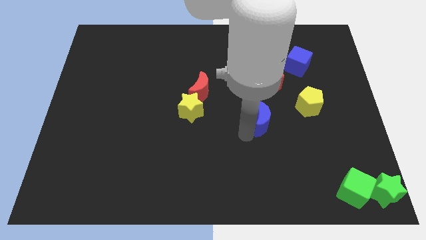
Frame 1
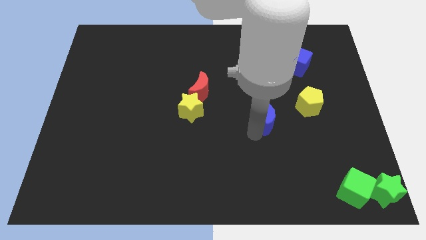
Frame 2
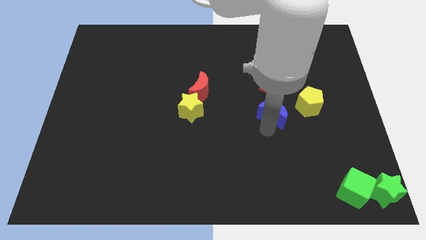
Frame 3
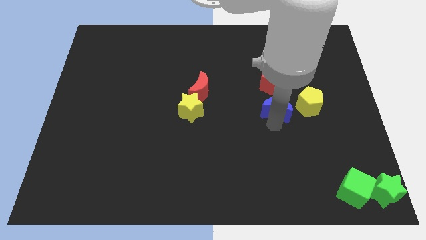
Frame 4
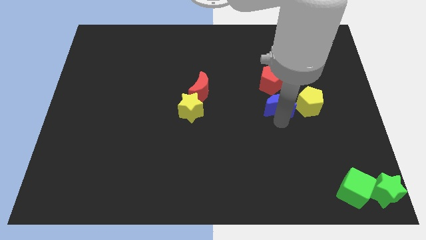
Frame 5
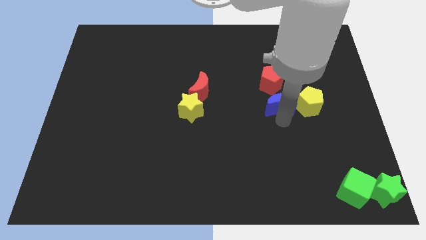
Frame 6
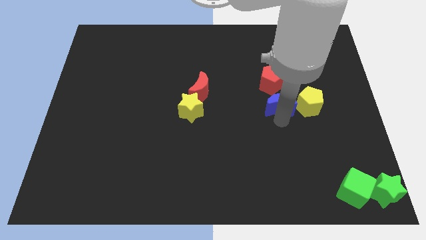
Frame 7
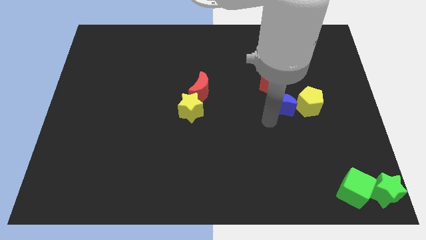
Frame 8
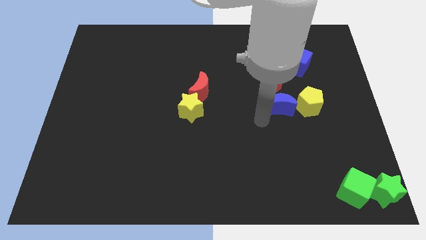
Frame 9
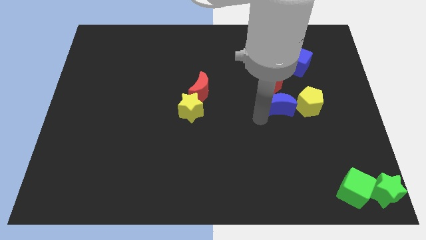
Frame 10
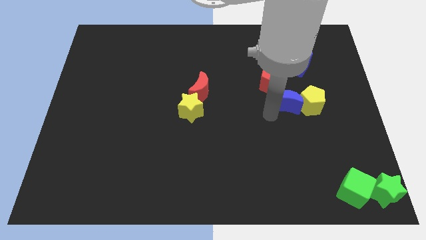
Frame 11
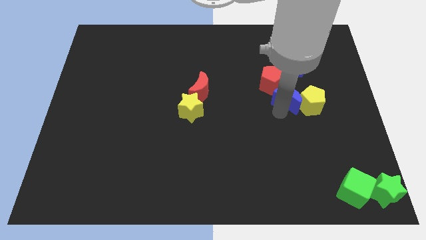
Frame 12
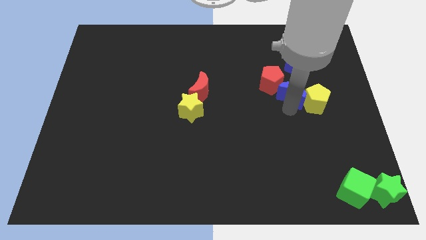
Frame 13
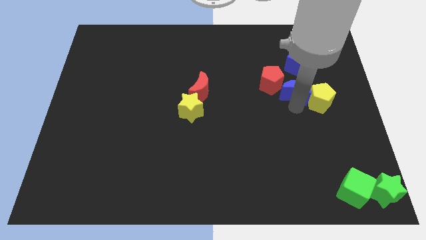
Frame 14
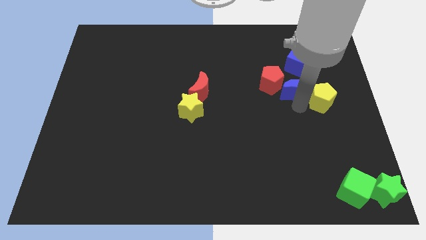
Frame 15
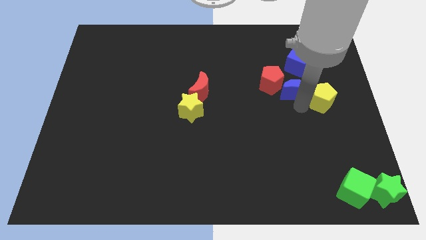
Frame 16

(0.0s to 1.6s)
move the blue crescent to the bottom right of the red pentagon

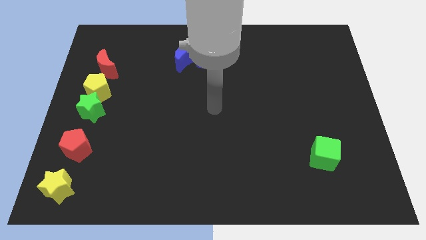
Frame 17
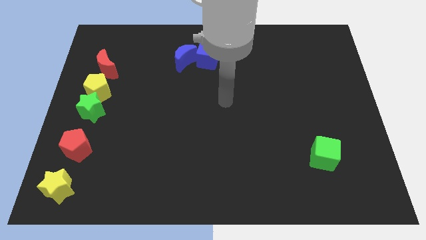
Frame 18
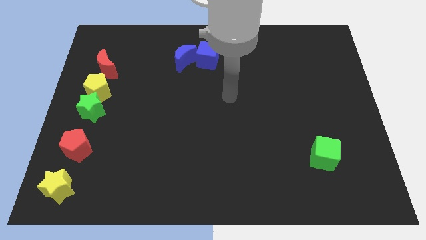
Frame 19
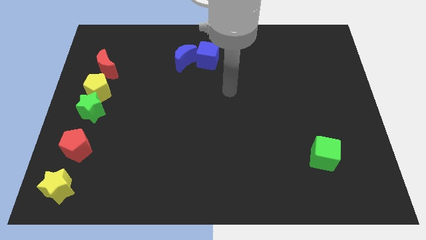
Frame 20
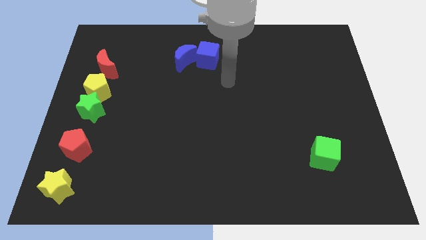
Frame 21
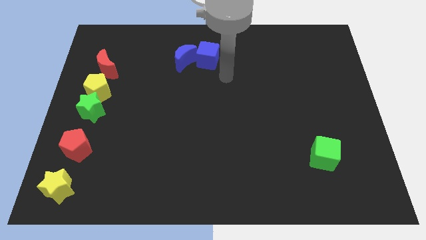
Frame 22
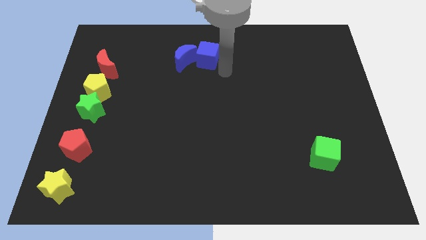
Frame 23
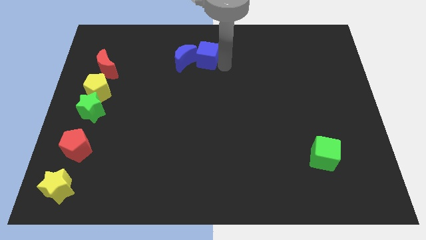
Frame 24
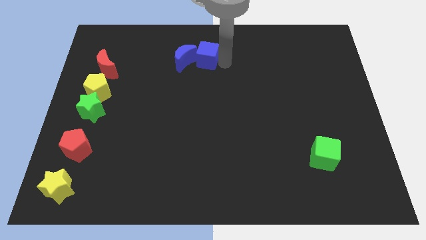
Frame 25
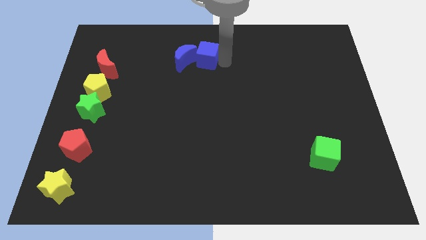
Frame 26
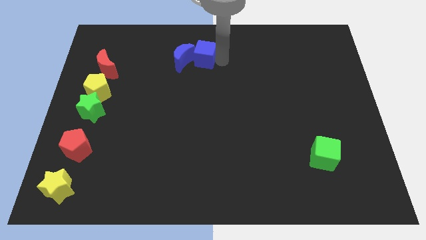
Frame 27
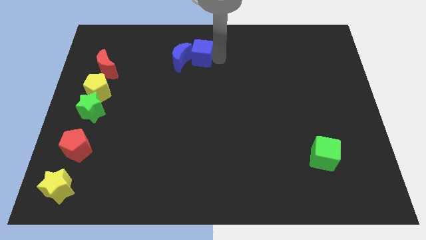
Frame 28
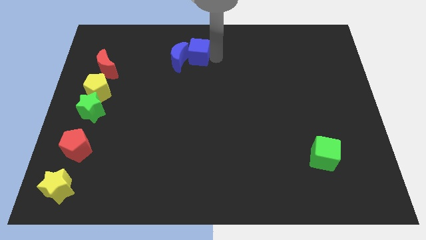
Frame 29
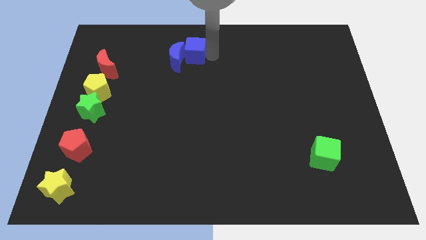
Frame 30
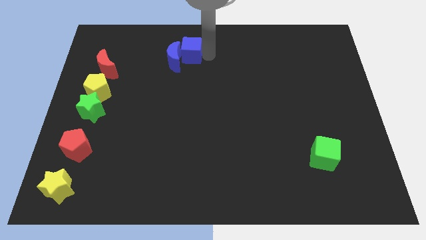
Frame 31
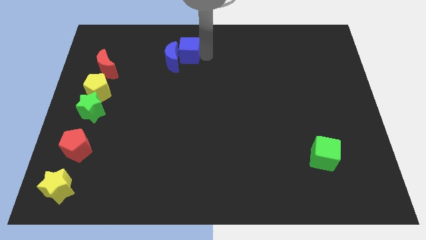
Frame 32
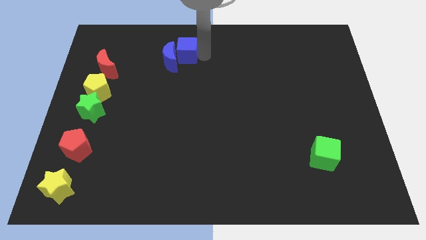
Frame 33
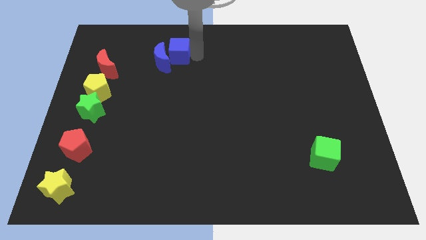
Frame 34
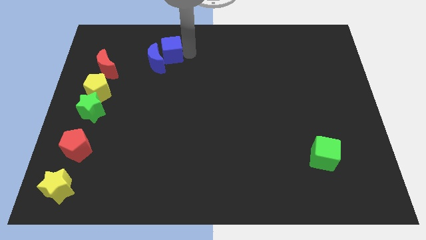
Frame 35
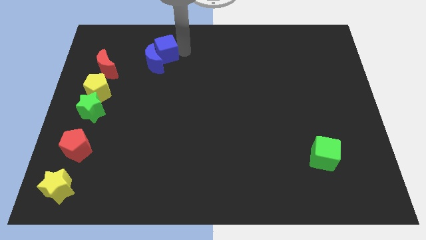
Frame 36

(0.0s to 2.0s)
move the blue blocks towards the left

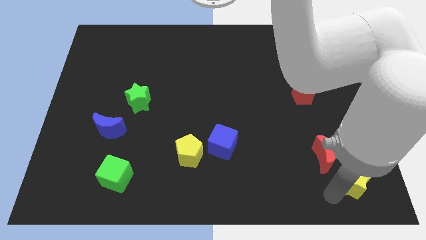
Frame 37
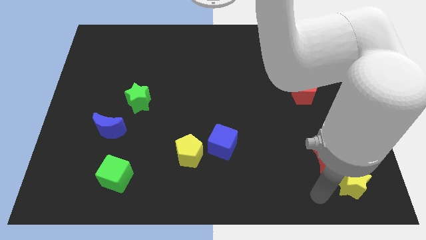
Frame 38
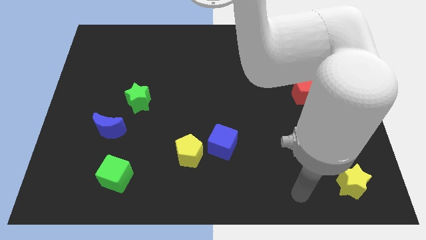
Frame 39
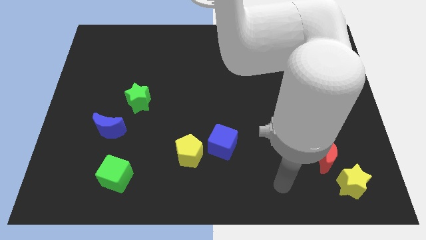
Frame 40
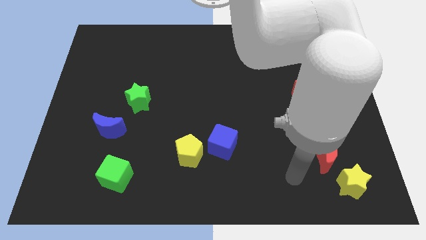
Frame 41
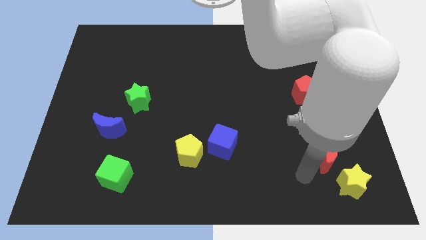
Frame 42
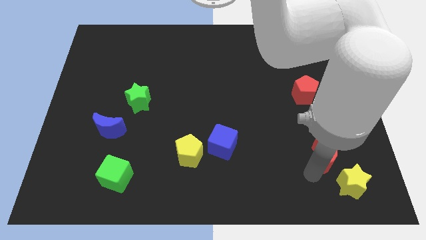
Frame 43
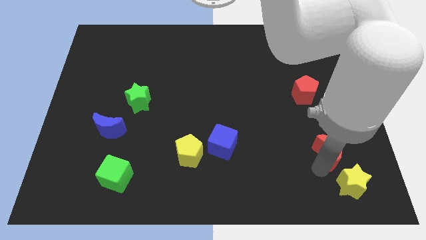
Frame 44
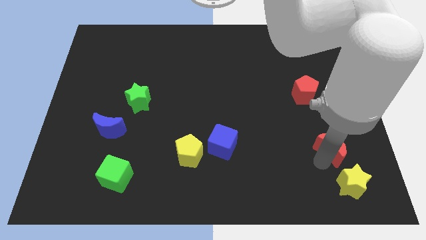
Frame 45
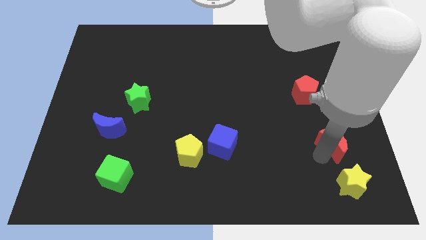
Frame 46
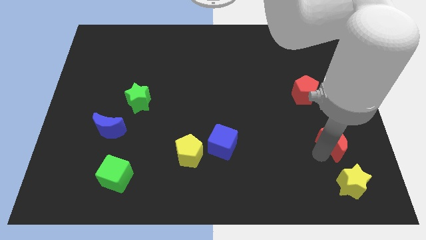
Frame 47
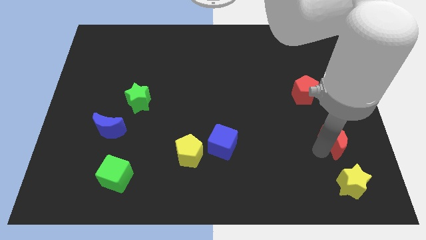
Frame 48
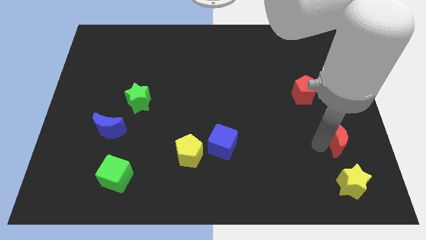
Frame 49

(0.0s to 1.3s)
move the red crescent in between the yellow star and red pentagon

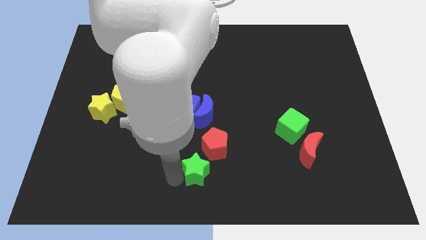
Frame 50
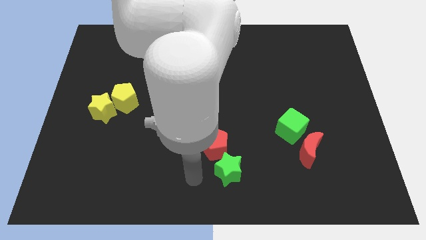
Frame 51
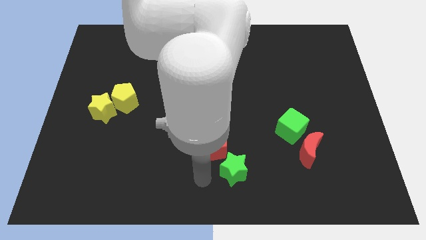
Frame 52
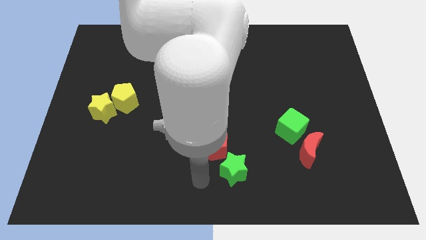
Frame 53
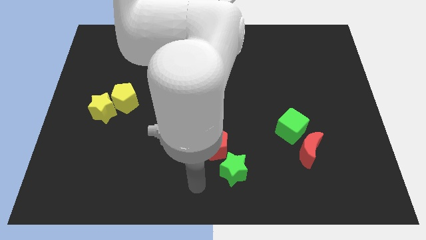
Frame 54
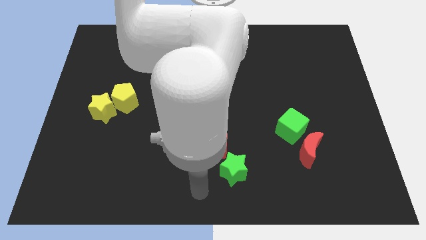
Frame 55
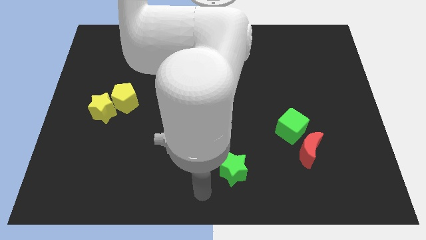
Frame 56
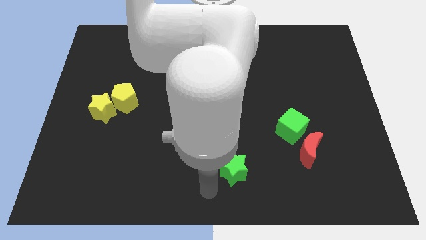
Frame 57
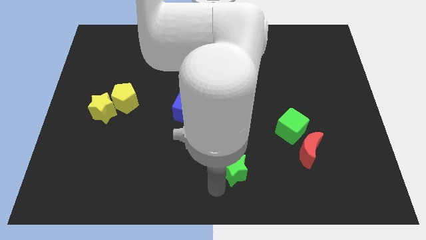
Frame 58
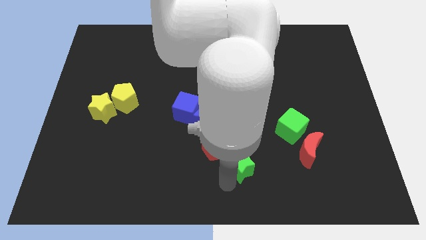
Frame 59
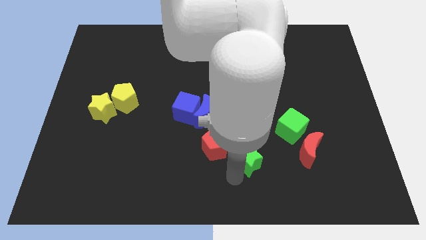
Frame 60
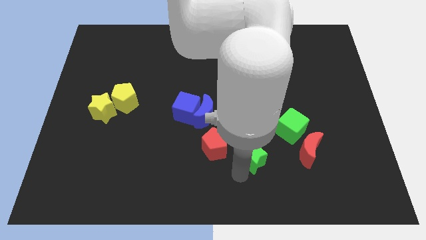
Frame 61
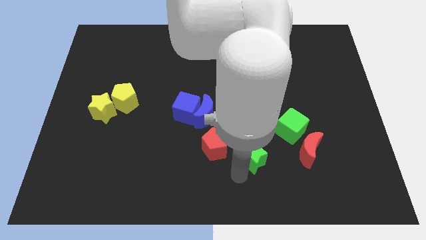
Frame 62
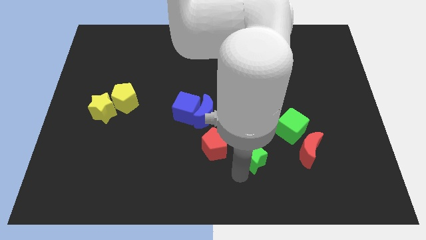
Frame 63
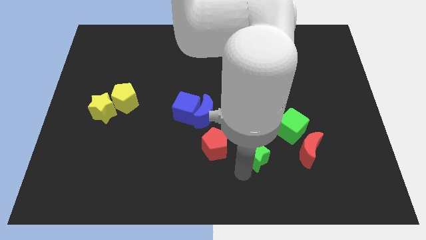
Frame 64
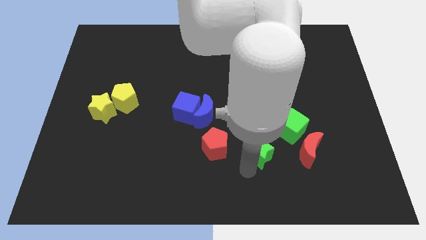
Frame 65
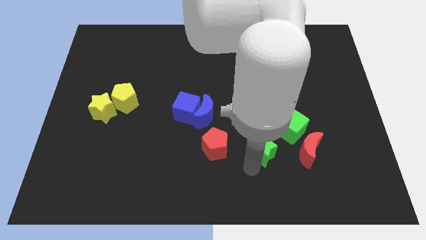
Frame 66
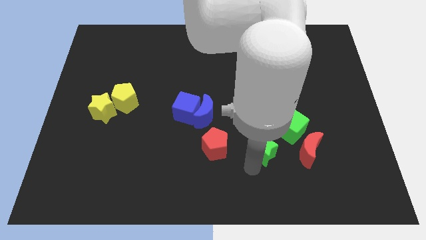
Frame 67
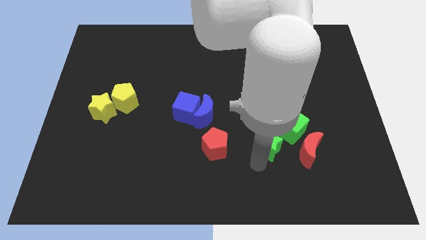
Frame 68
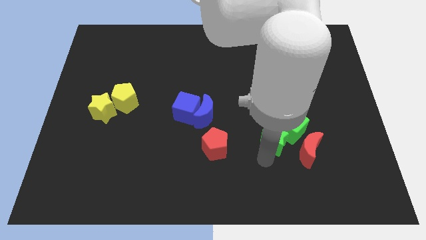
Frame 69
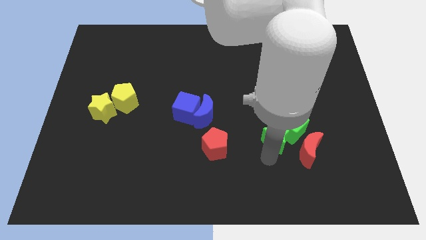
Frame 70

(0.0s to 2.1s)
move the green star to the bottom left side of the green cube

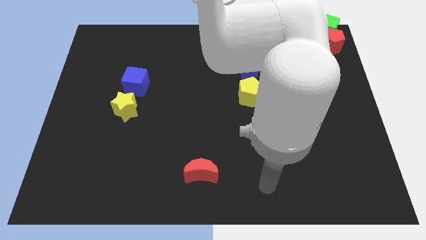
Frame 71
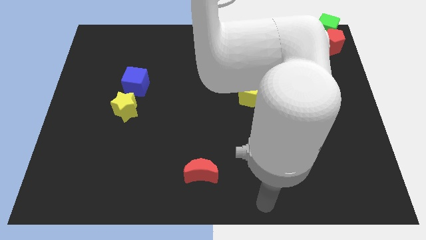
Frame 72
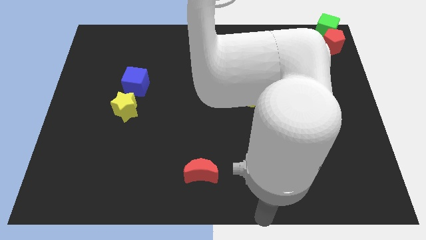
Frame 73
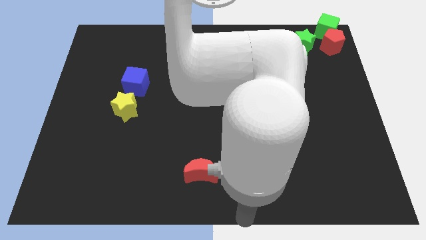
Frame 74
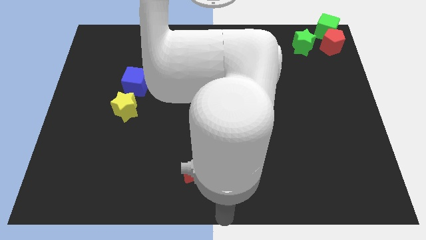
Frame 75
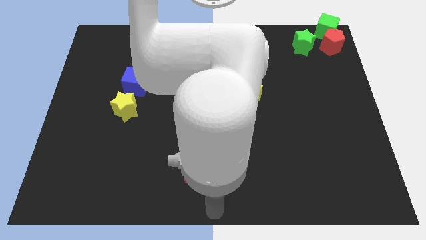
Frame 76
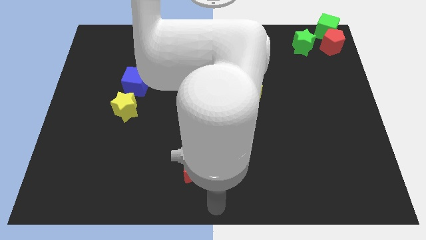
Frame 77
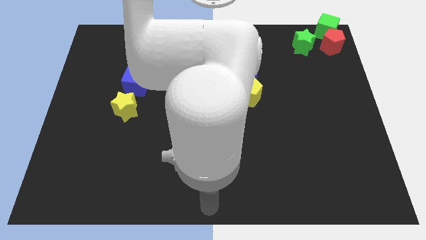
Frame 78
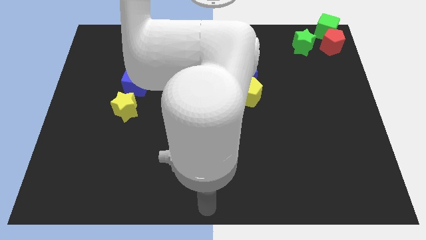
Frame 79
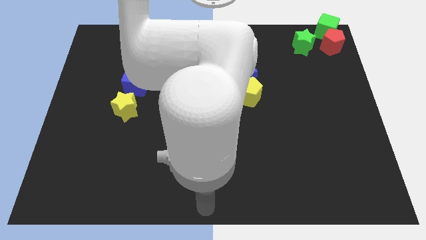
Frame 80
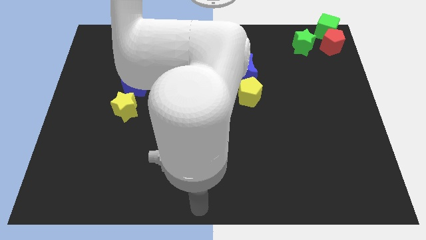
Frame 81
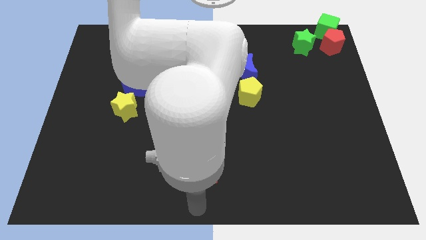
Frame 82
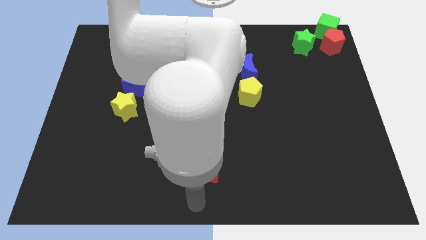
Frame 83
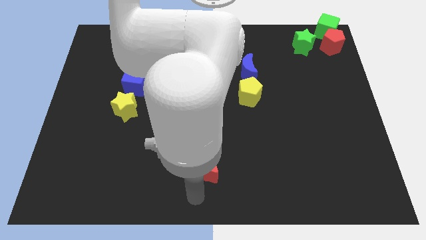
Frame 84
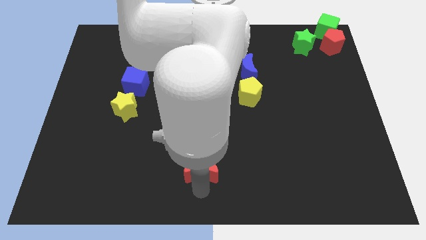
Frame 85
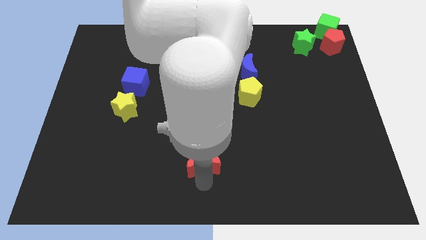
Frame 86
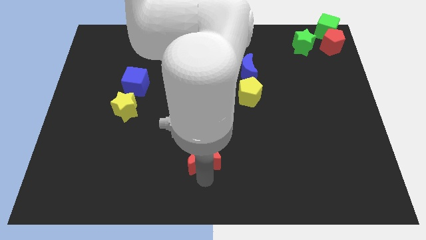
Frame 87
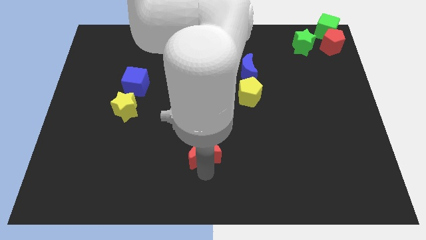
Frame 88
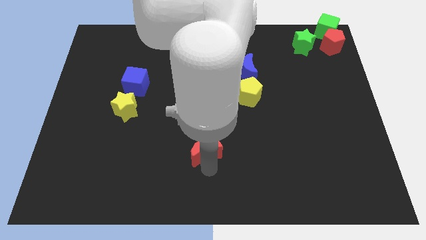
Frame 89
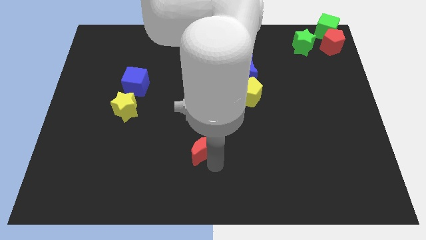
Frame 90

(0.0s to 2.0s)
move the red moon slightly up
